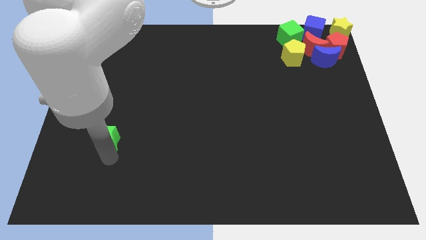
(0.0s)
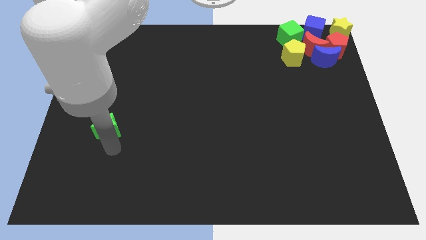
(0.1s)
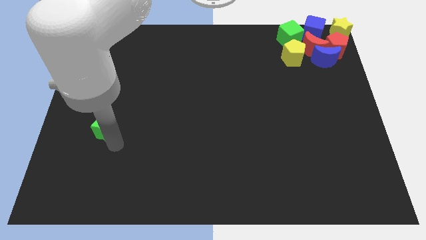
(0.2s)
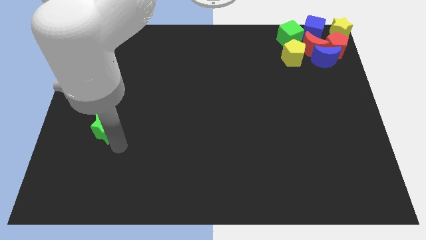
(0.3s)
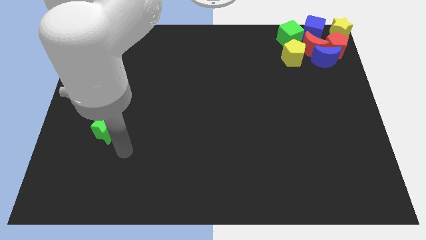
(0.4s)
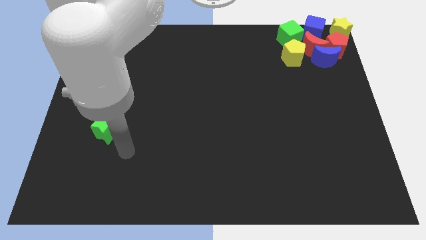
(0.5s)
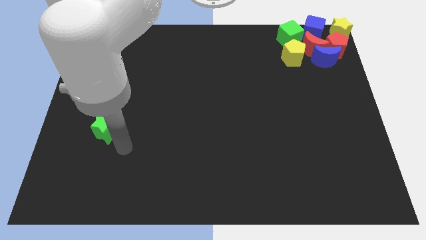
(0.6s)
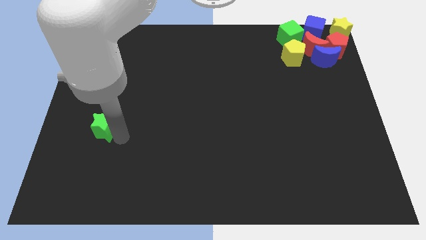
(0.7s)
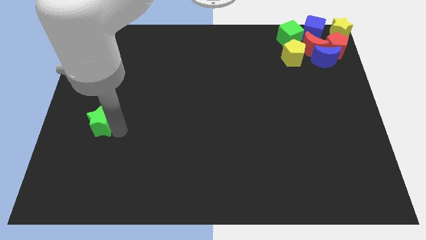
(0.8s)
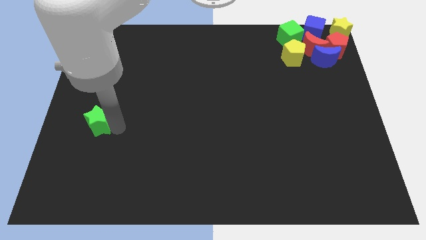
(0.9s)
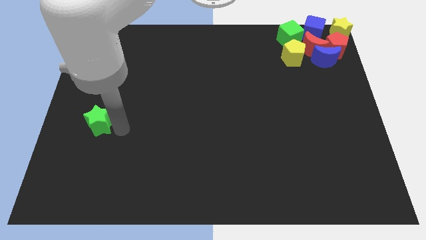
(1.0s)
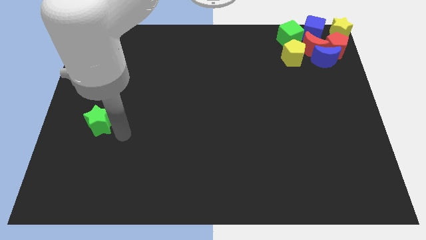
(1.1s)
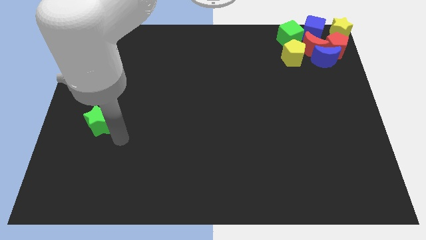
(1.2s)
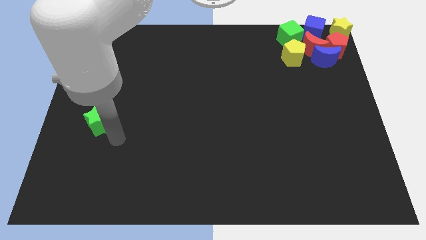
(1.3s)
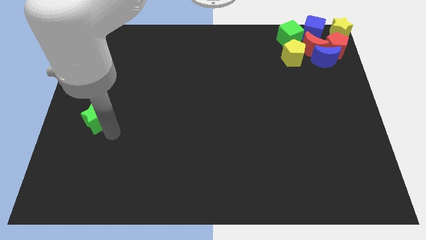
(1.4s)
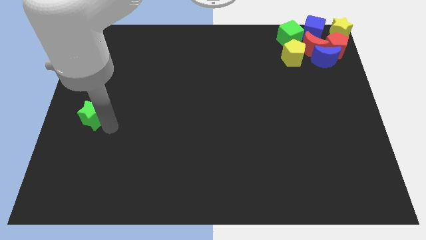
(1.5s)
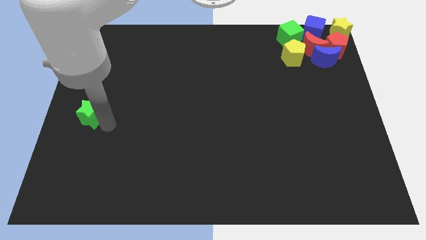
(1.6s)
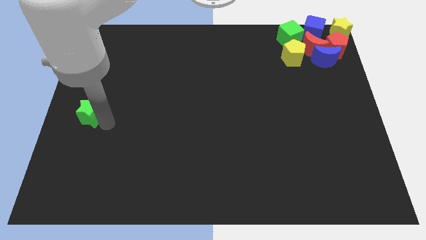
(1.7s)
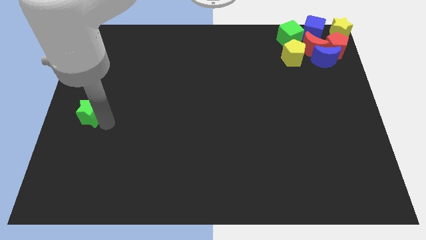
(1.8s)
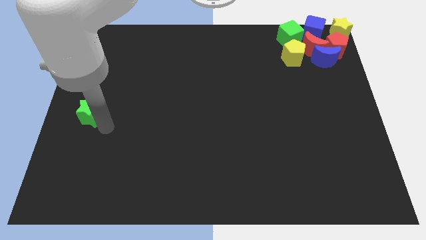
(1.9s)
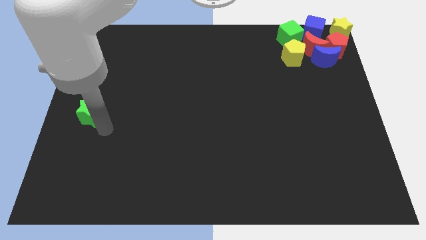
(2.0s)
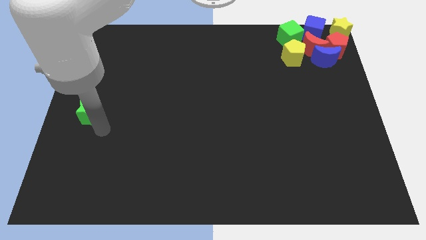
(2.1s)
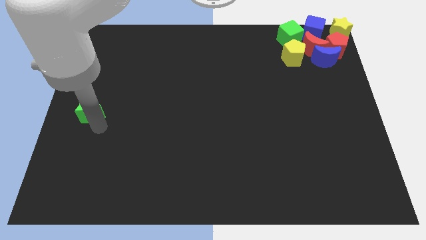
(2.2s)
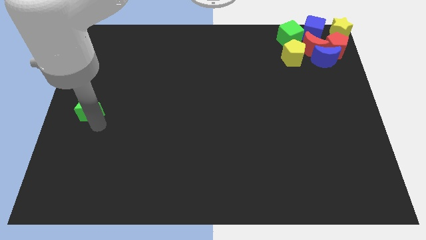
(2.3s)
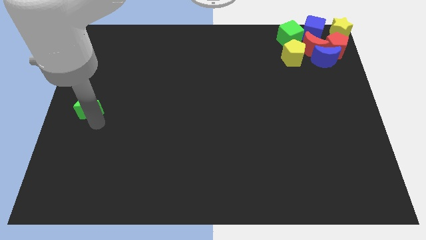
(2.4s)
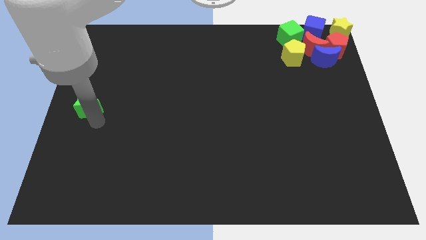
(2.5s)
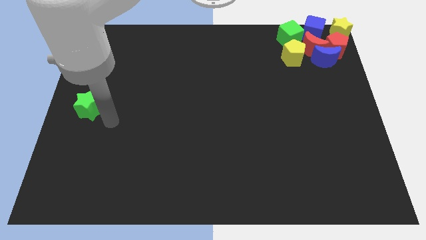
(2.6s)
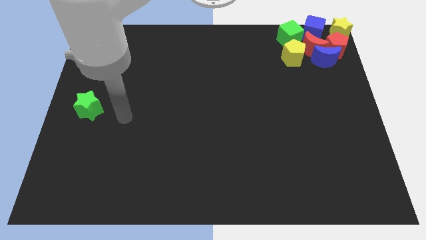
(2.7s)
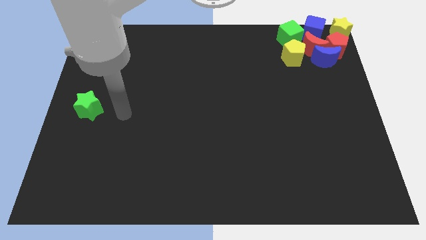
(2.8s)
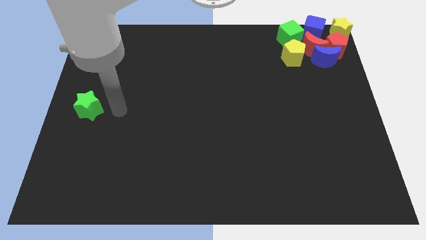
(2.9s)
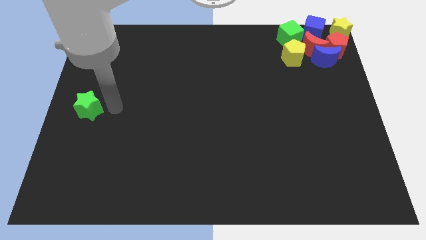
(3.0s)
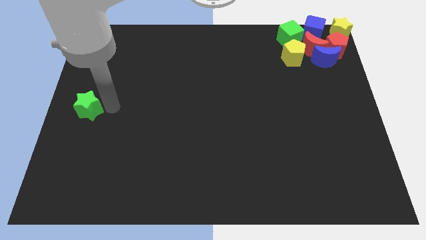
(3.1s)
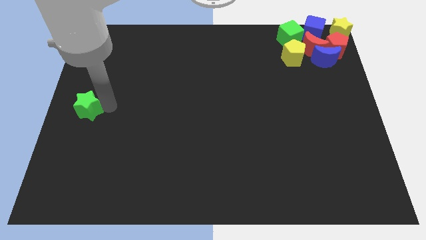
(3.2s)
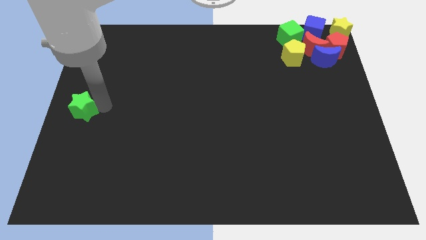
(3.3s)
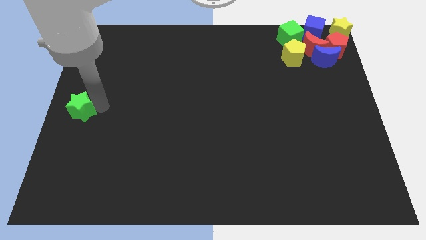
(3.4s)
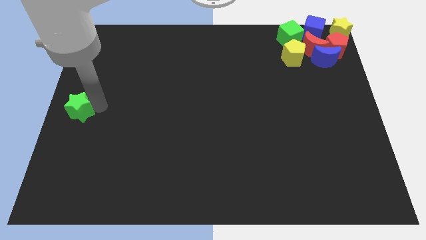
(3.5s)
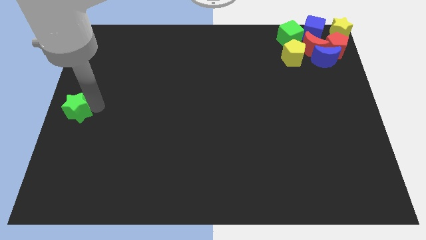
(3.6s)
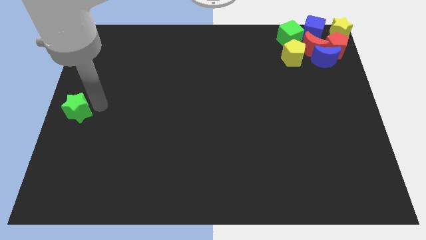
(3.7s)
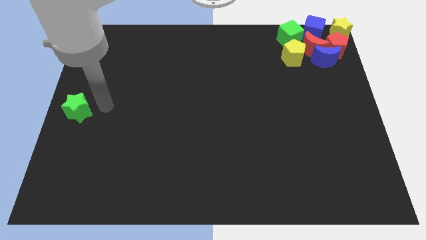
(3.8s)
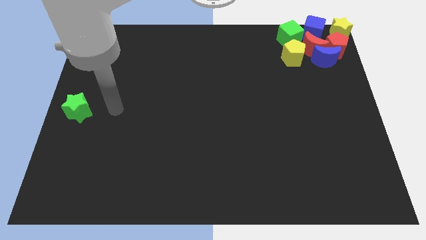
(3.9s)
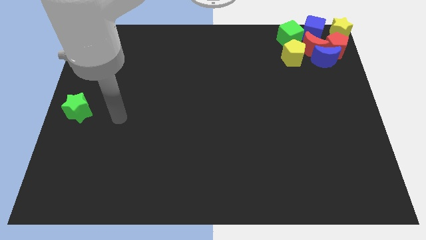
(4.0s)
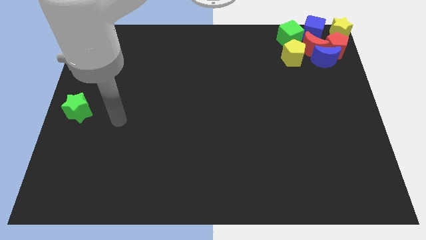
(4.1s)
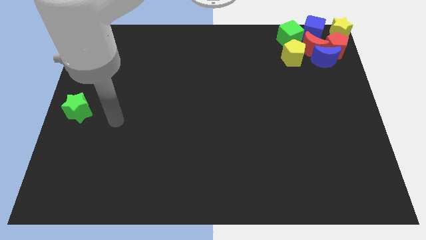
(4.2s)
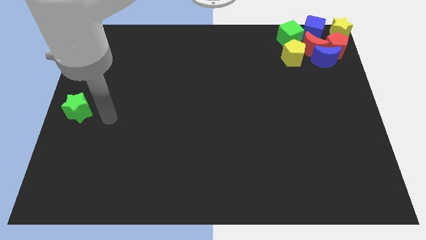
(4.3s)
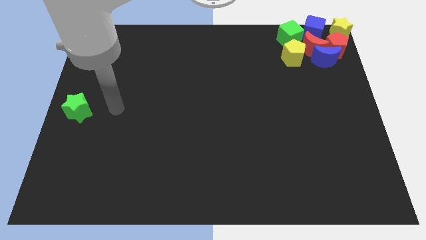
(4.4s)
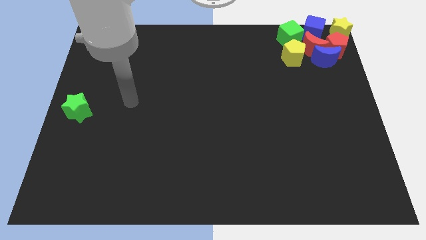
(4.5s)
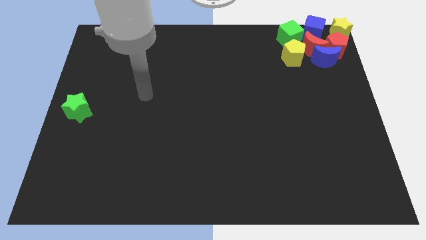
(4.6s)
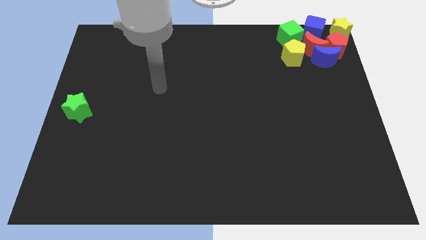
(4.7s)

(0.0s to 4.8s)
place the green star center on the left corner of the board

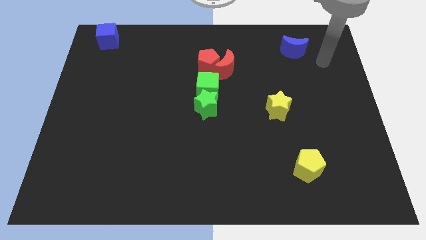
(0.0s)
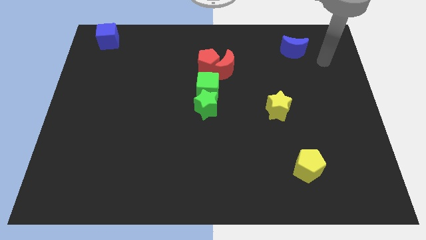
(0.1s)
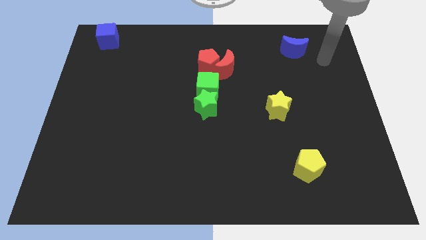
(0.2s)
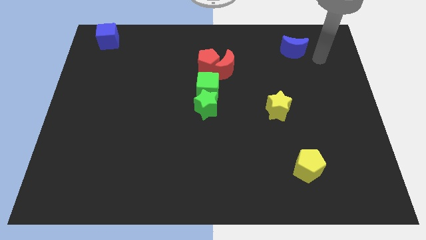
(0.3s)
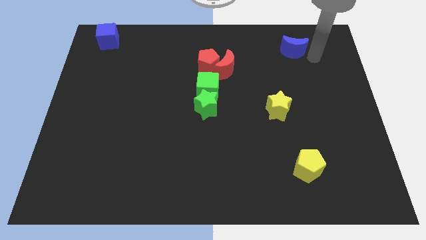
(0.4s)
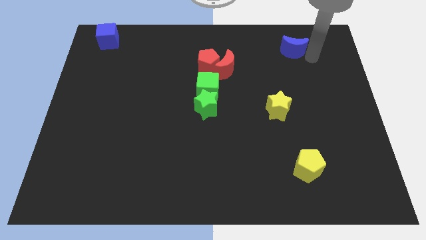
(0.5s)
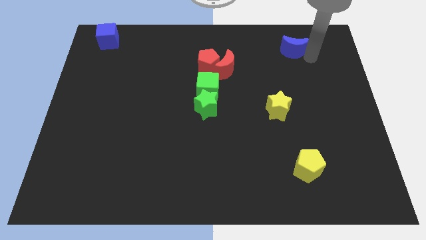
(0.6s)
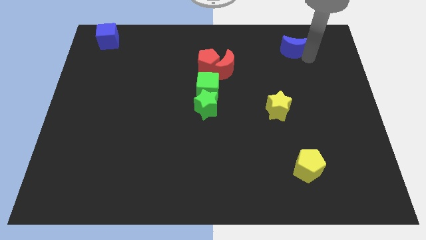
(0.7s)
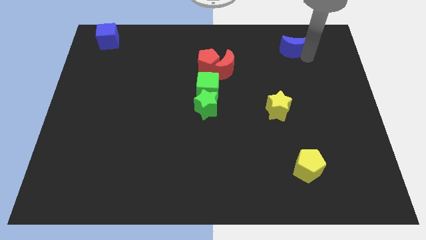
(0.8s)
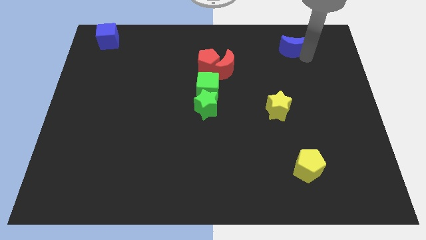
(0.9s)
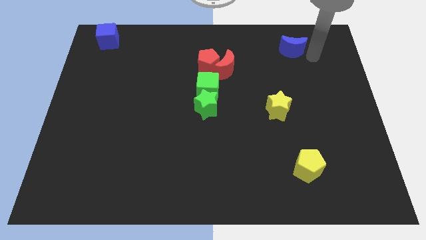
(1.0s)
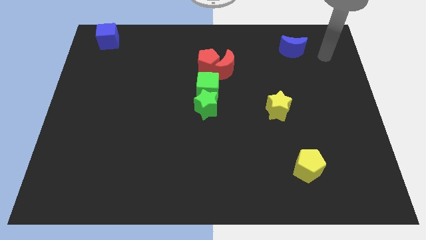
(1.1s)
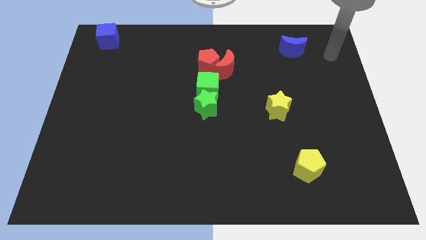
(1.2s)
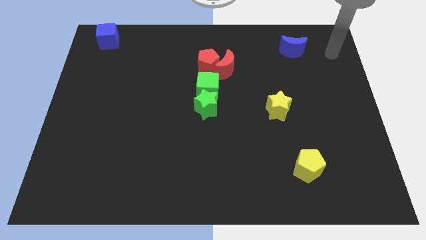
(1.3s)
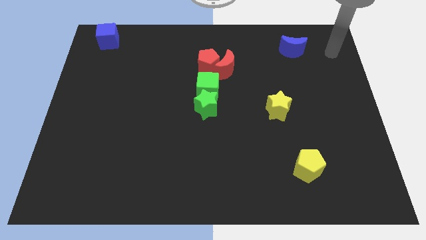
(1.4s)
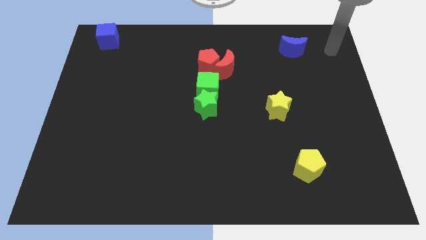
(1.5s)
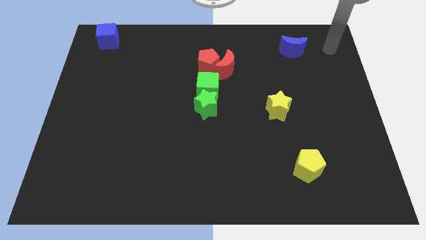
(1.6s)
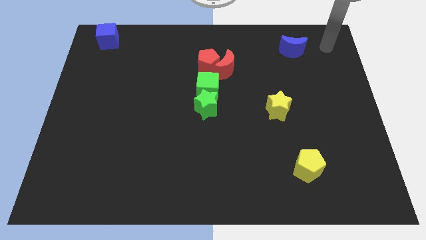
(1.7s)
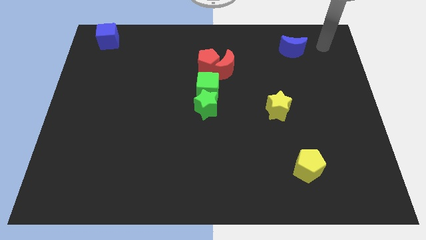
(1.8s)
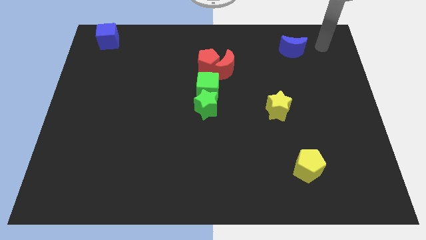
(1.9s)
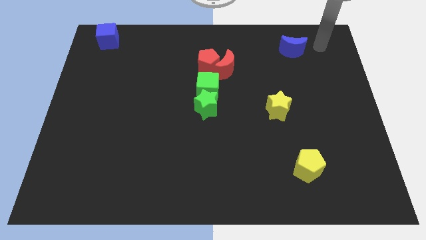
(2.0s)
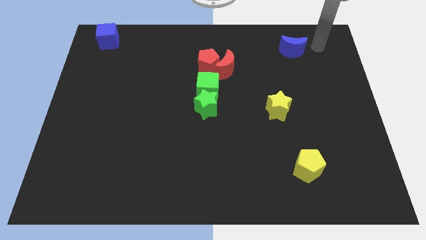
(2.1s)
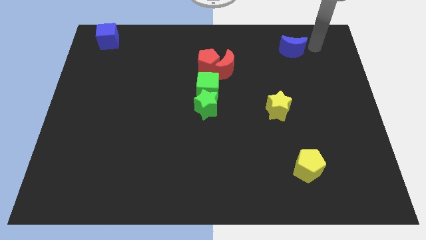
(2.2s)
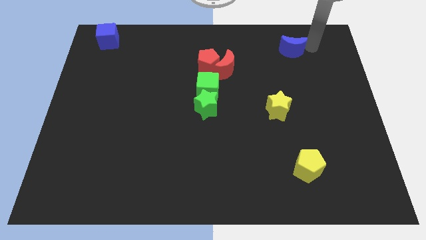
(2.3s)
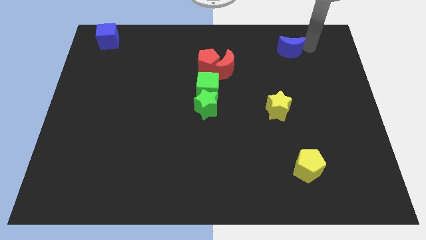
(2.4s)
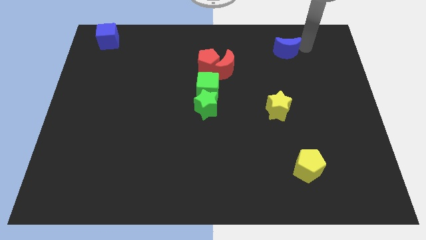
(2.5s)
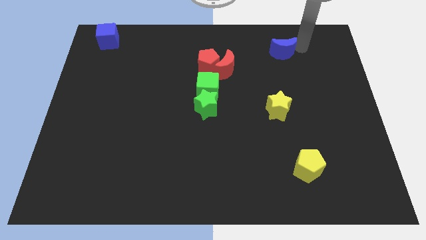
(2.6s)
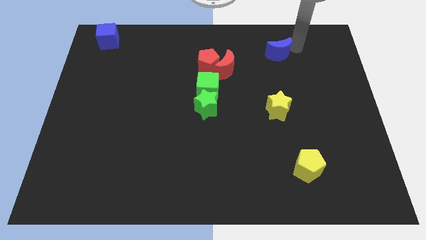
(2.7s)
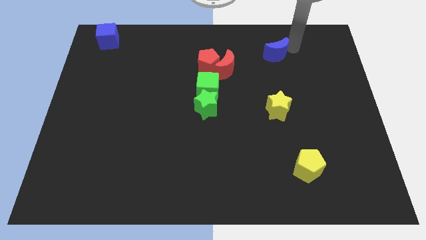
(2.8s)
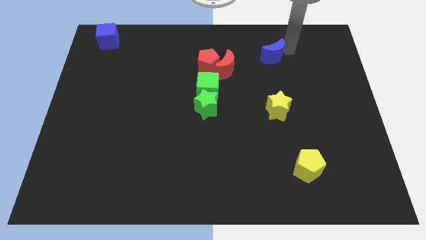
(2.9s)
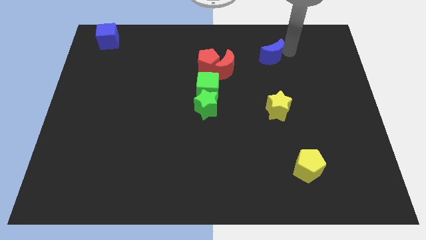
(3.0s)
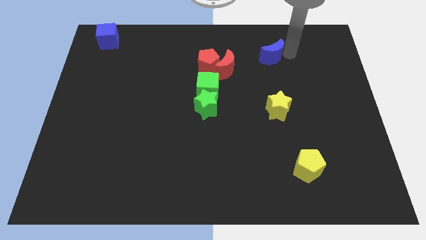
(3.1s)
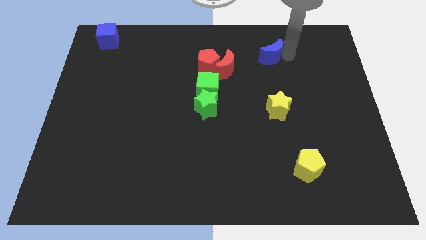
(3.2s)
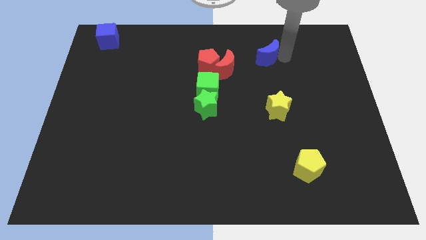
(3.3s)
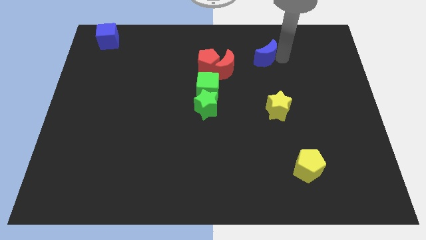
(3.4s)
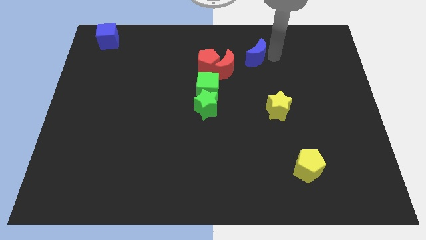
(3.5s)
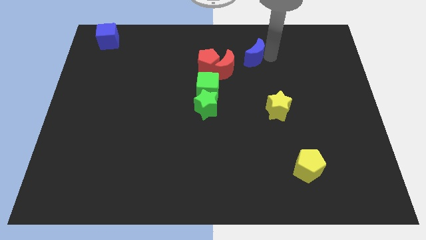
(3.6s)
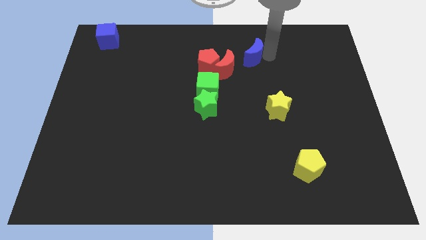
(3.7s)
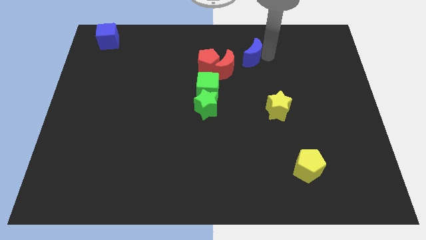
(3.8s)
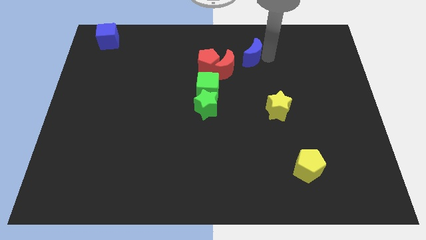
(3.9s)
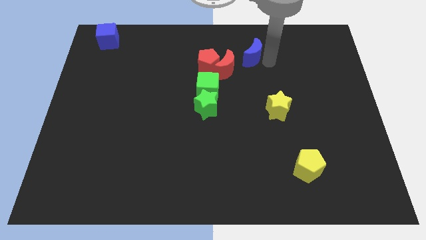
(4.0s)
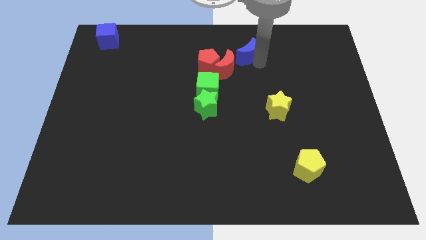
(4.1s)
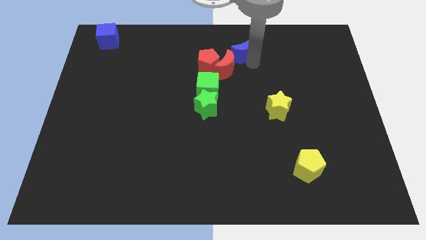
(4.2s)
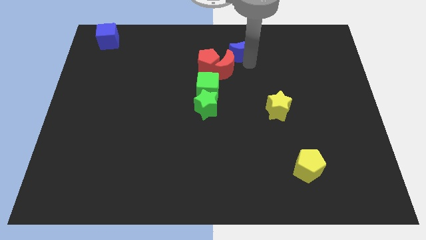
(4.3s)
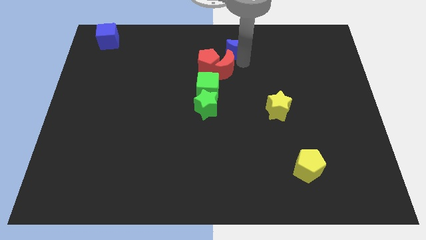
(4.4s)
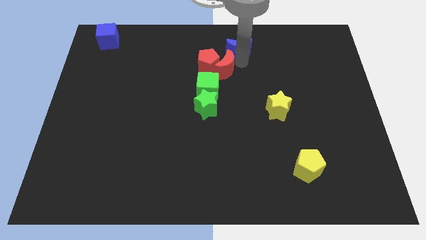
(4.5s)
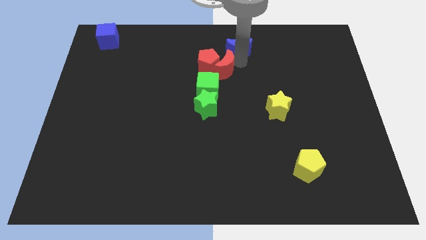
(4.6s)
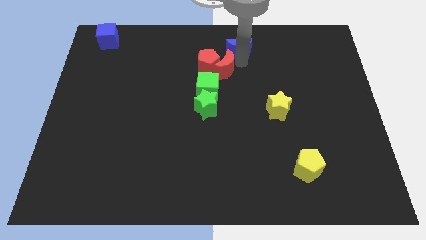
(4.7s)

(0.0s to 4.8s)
slide the blue crescent slightly to the left
